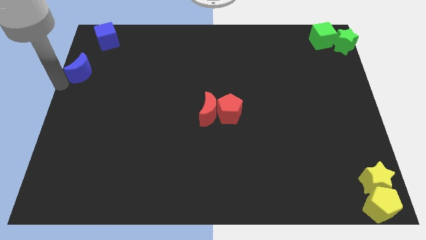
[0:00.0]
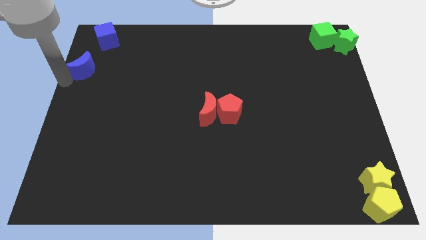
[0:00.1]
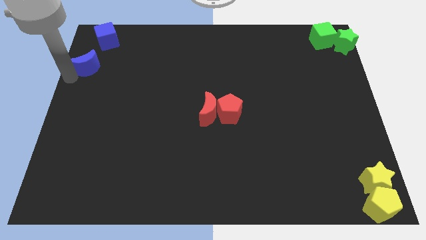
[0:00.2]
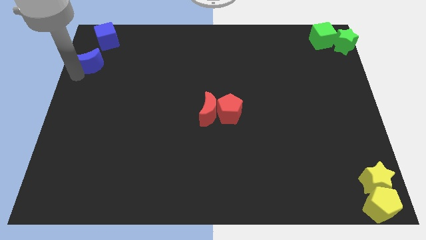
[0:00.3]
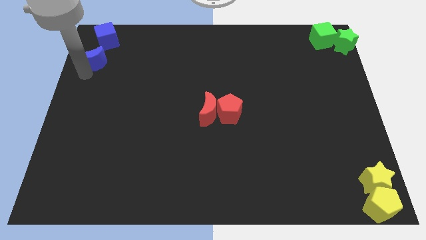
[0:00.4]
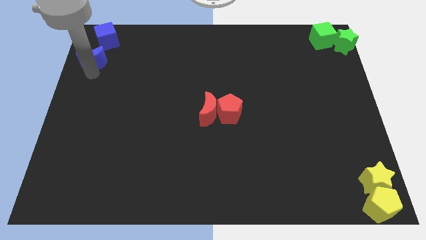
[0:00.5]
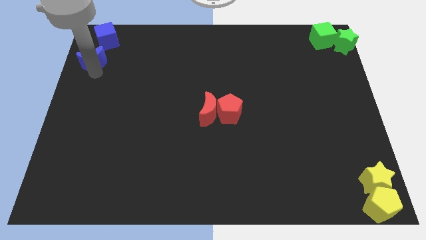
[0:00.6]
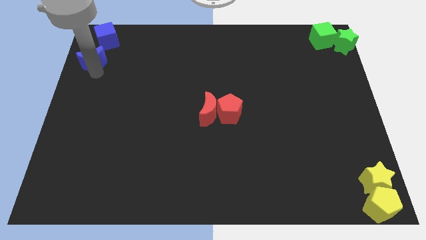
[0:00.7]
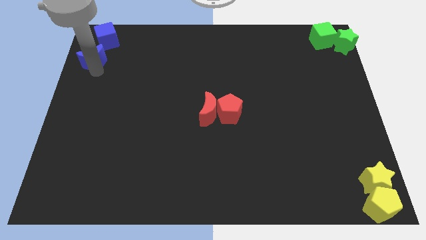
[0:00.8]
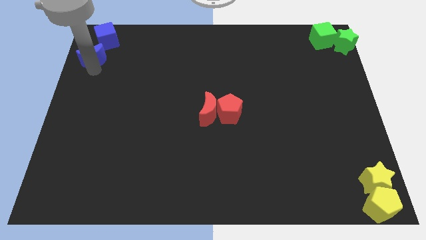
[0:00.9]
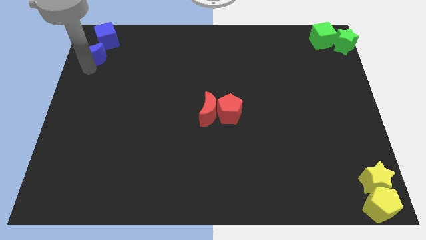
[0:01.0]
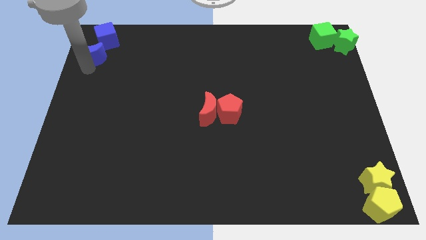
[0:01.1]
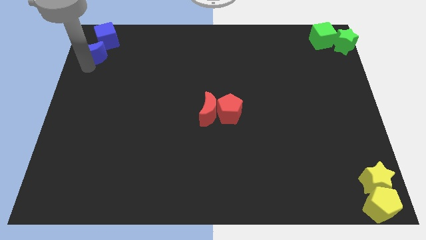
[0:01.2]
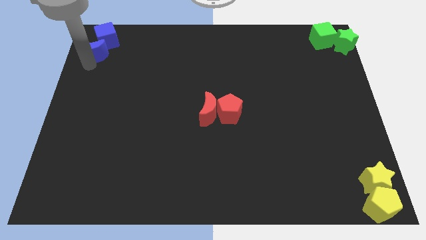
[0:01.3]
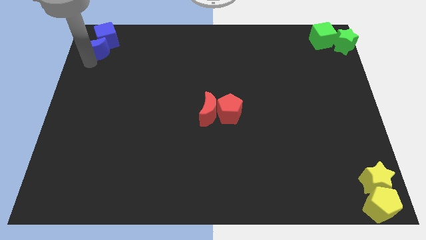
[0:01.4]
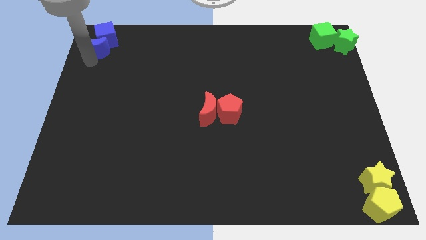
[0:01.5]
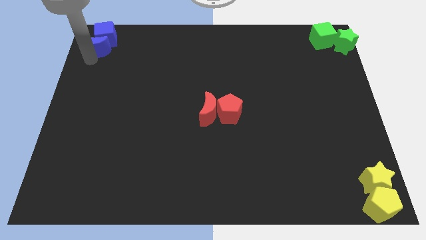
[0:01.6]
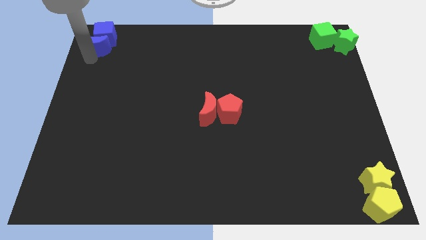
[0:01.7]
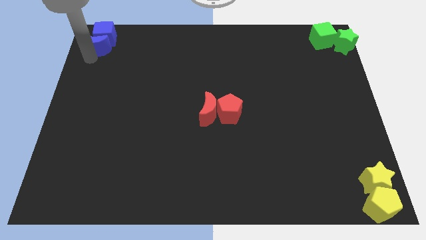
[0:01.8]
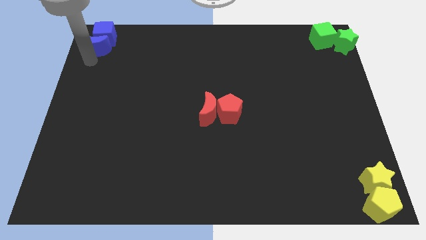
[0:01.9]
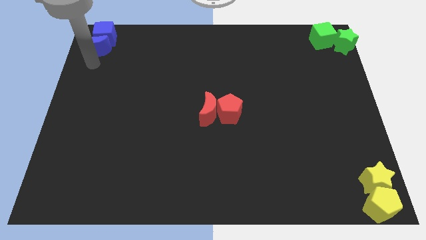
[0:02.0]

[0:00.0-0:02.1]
push the blue moon to bottom of the blue cube

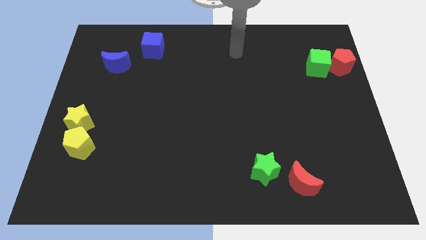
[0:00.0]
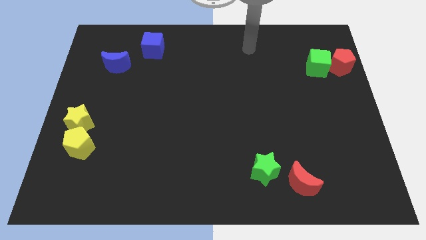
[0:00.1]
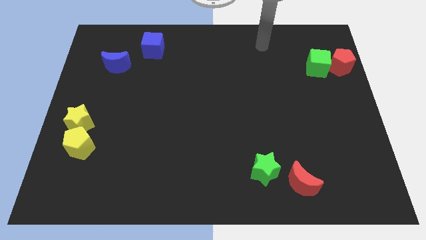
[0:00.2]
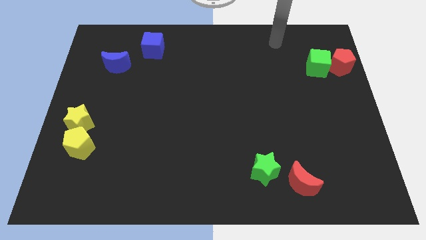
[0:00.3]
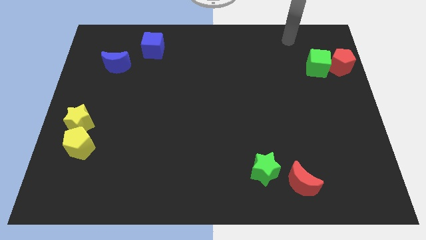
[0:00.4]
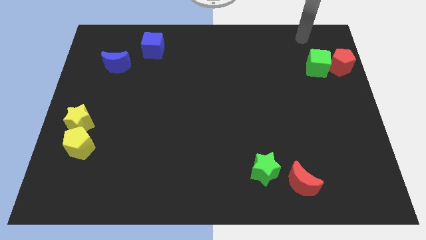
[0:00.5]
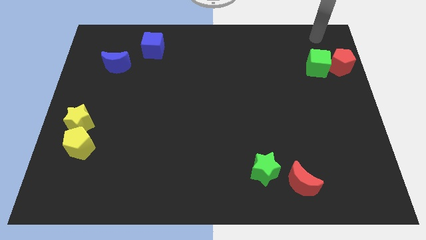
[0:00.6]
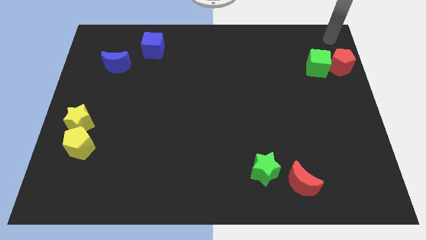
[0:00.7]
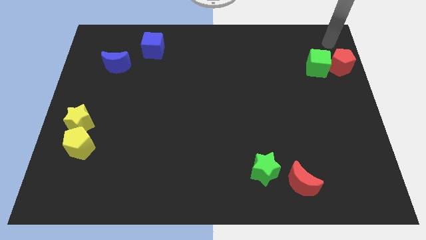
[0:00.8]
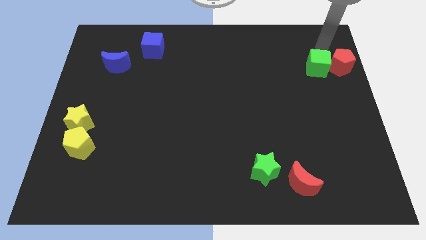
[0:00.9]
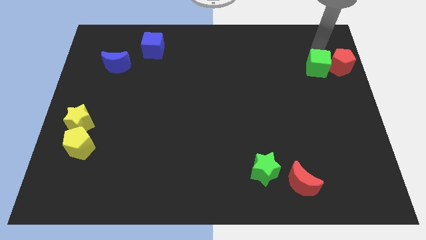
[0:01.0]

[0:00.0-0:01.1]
point your arm above the green cube

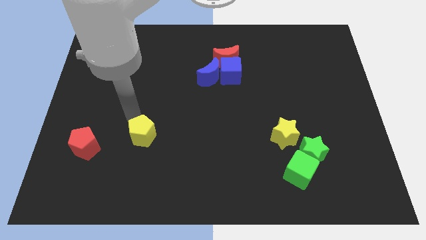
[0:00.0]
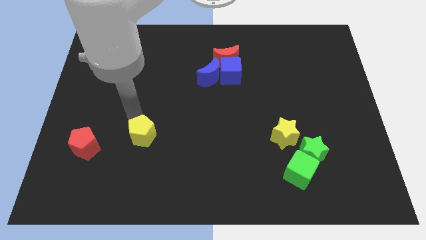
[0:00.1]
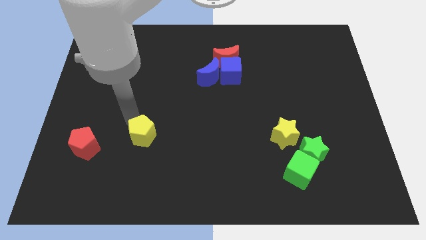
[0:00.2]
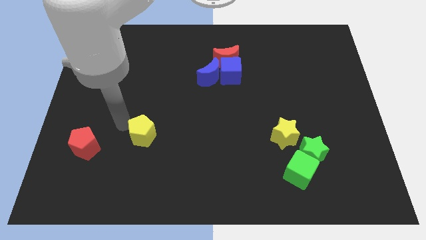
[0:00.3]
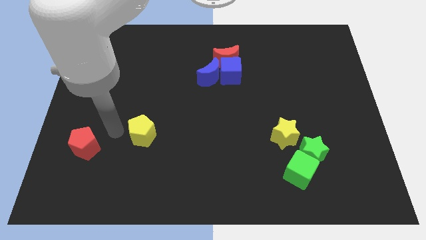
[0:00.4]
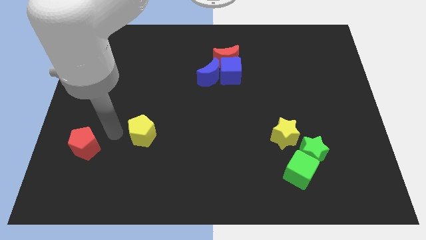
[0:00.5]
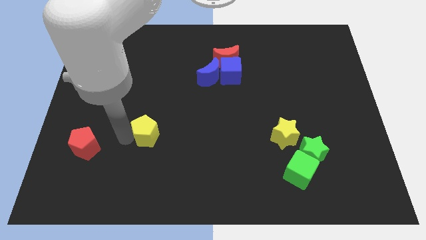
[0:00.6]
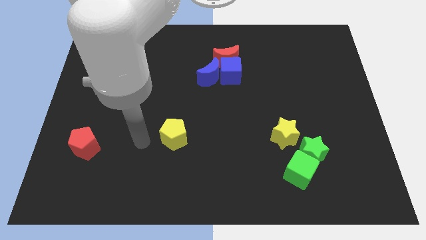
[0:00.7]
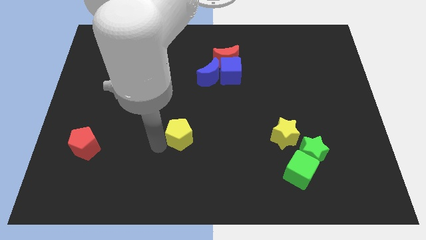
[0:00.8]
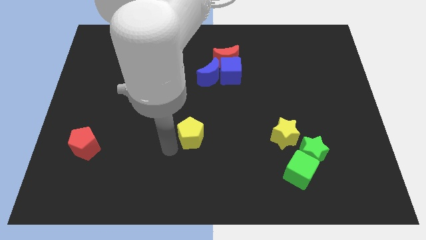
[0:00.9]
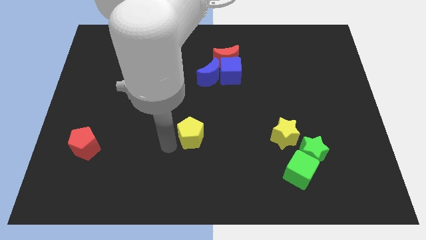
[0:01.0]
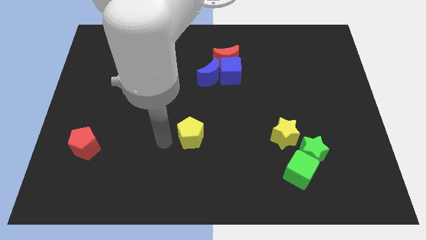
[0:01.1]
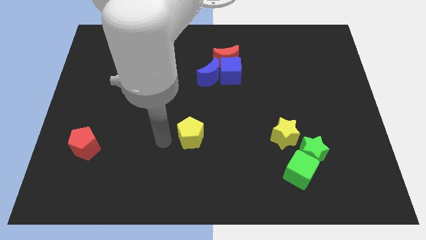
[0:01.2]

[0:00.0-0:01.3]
move the yellow pentagon to the left of the yellow star

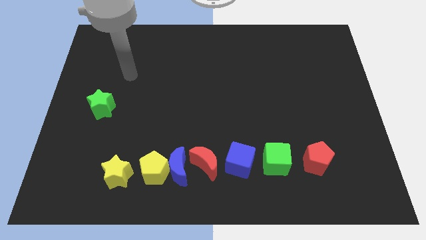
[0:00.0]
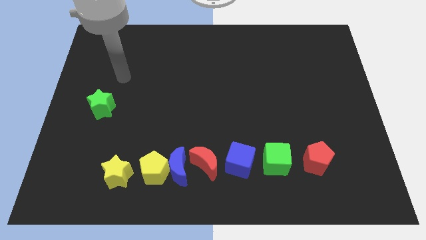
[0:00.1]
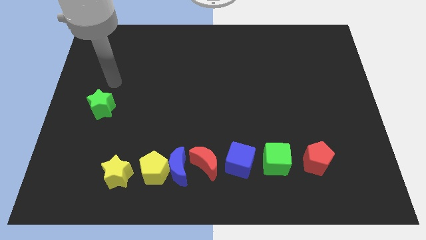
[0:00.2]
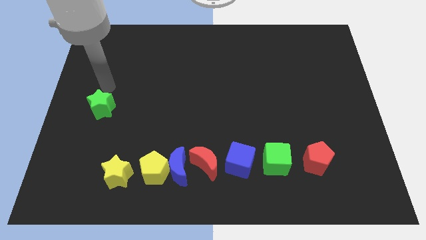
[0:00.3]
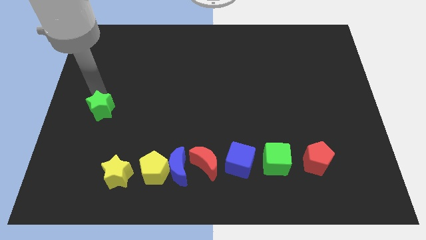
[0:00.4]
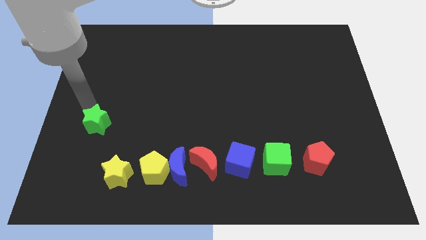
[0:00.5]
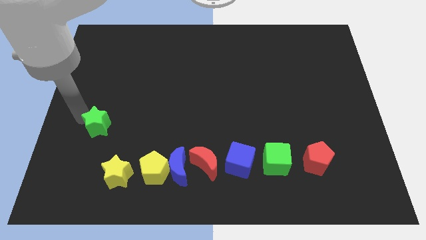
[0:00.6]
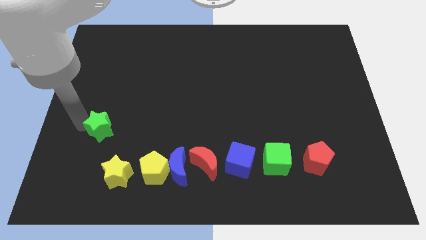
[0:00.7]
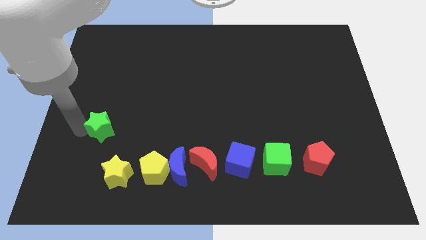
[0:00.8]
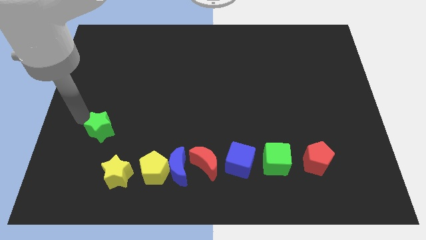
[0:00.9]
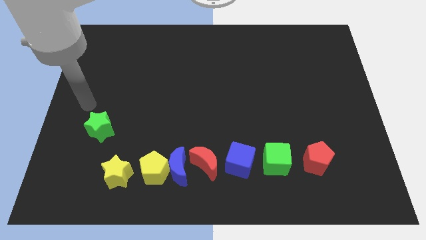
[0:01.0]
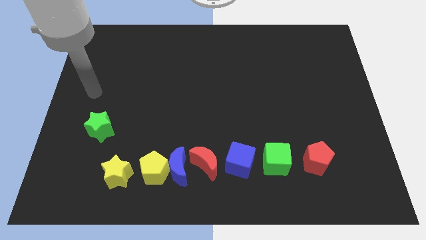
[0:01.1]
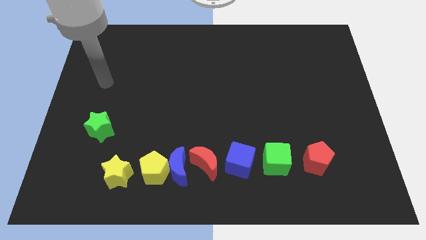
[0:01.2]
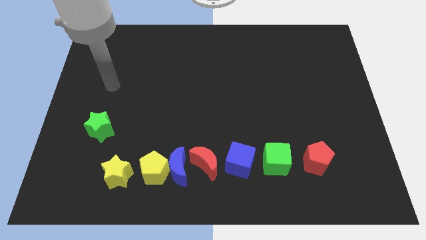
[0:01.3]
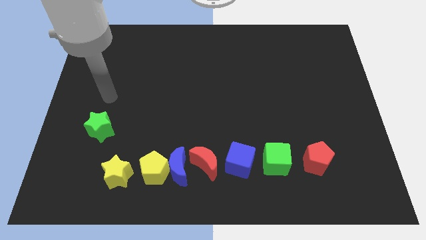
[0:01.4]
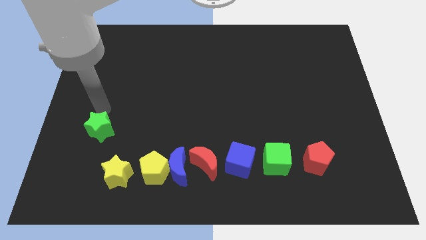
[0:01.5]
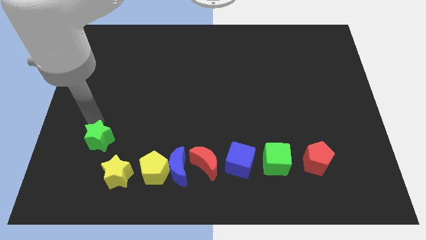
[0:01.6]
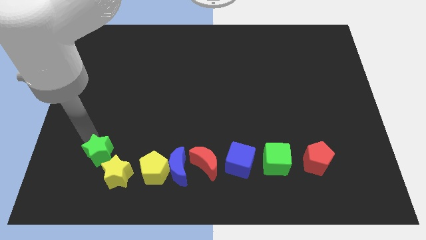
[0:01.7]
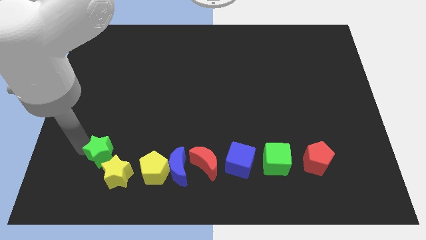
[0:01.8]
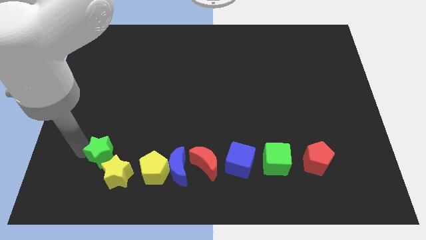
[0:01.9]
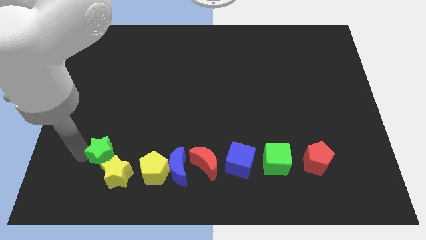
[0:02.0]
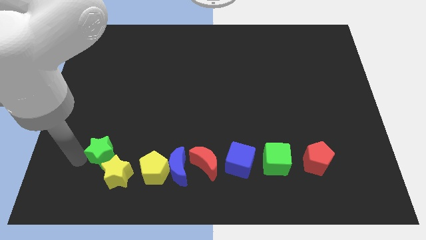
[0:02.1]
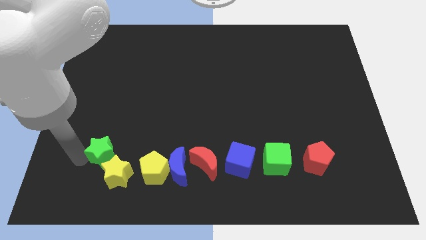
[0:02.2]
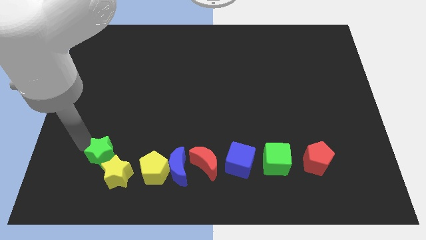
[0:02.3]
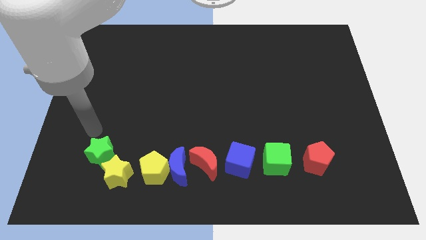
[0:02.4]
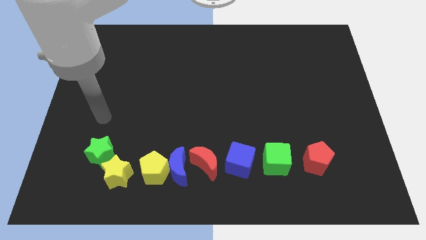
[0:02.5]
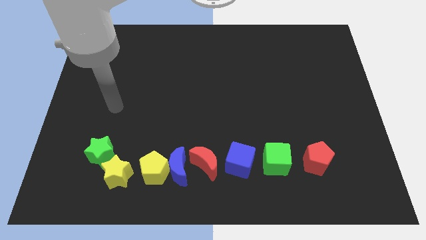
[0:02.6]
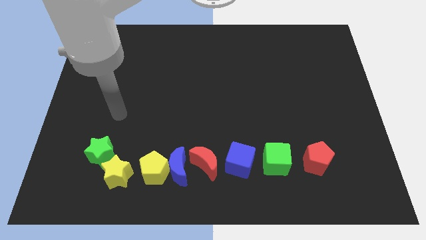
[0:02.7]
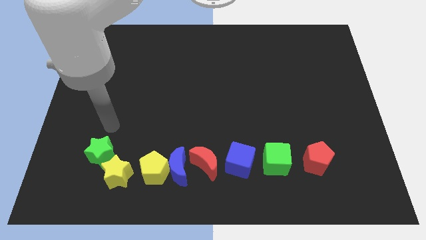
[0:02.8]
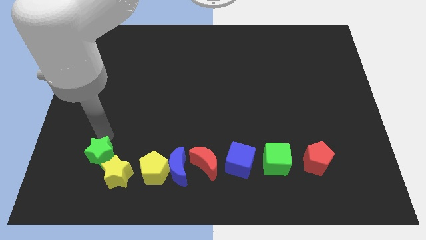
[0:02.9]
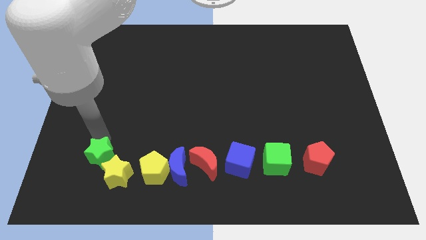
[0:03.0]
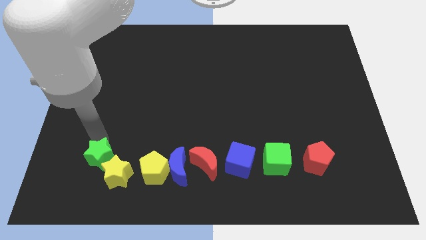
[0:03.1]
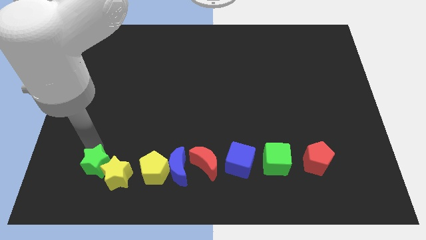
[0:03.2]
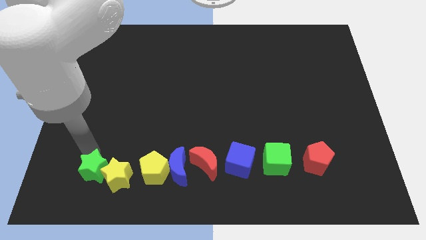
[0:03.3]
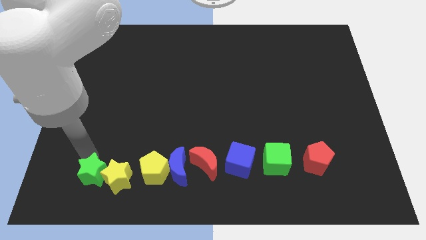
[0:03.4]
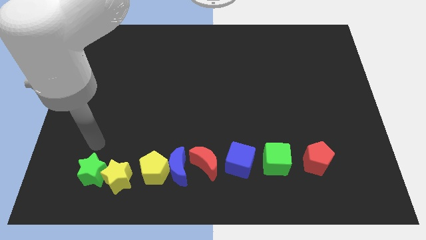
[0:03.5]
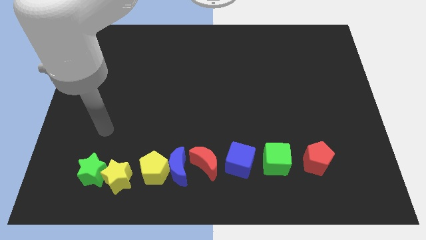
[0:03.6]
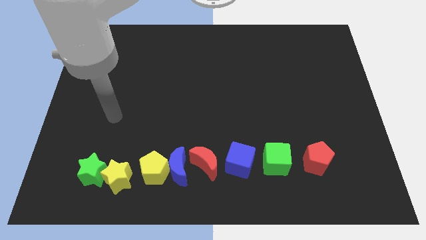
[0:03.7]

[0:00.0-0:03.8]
place green star beside yellow star

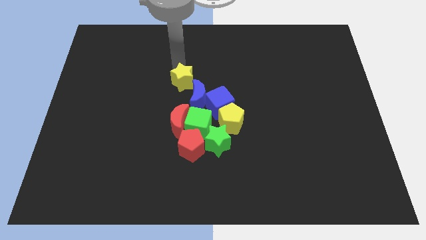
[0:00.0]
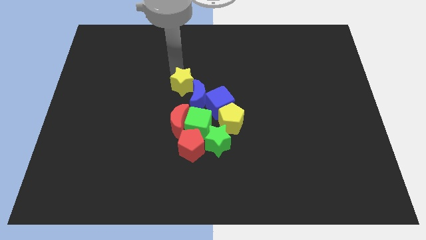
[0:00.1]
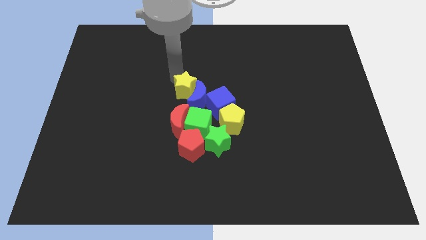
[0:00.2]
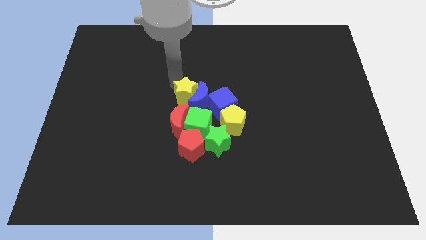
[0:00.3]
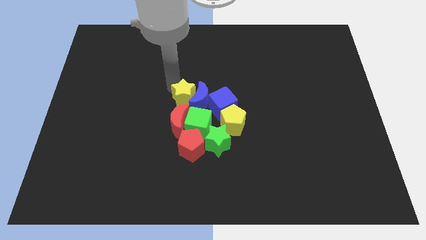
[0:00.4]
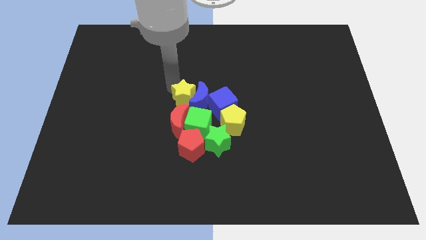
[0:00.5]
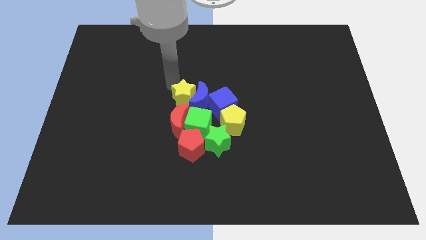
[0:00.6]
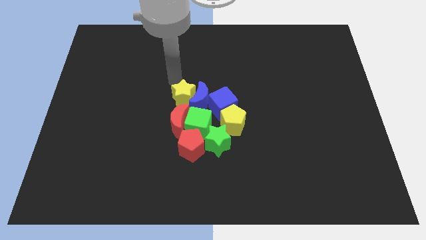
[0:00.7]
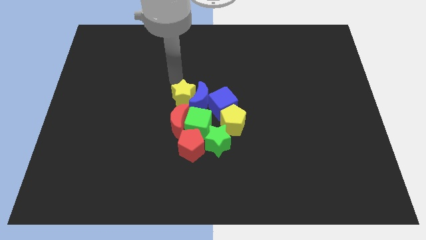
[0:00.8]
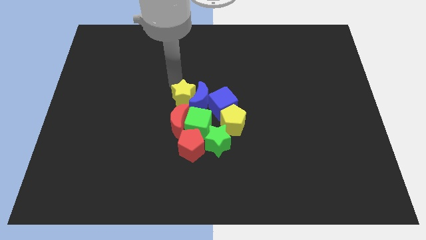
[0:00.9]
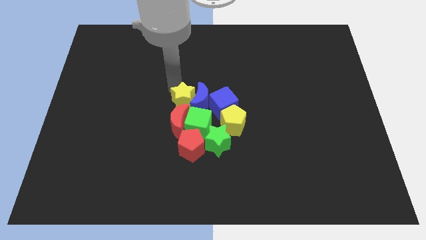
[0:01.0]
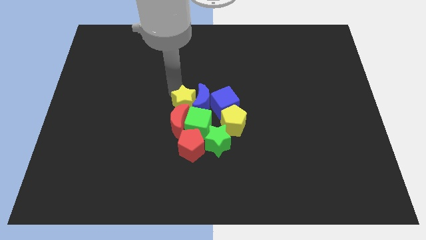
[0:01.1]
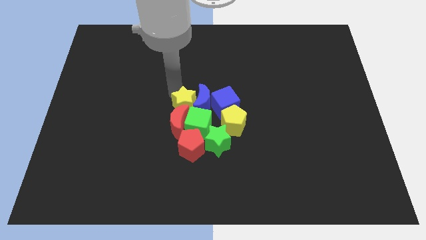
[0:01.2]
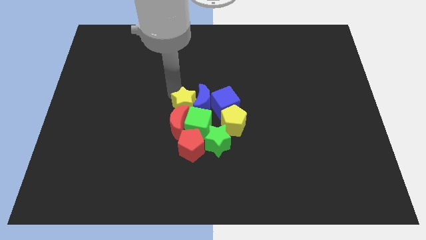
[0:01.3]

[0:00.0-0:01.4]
push the yellow star to the left side of the blue crescent
